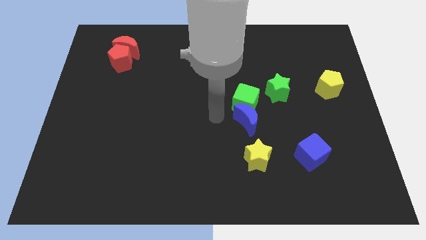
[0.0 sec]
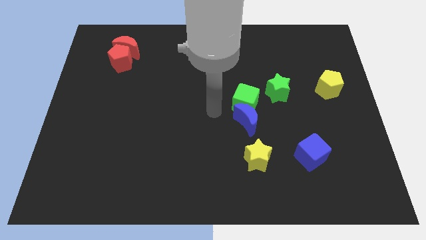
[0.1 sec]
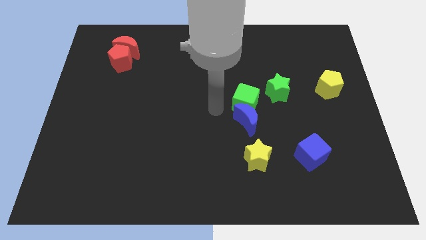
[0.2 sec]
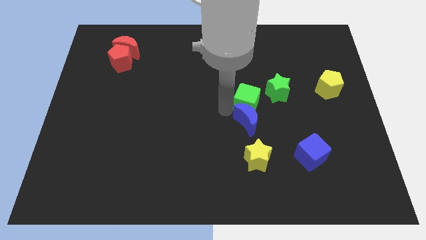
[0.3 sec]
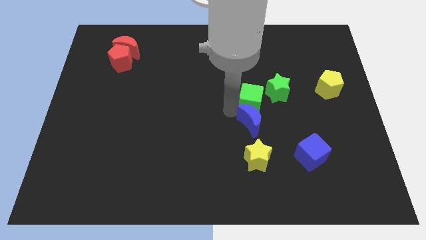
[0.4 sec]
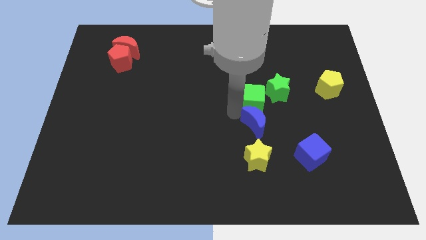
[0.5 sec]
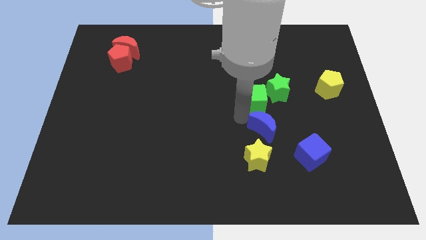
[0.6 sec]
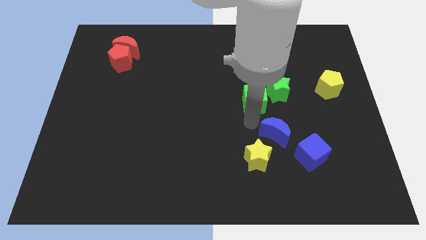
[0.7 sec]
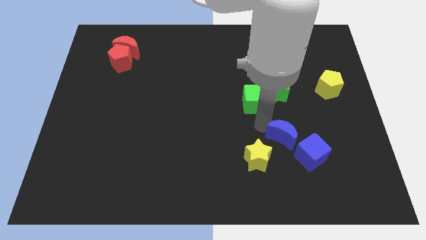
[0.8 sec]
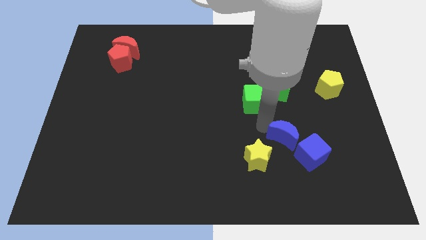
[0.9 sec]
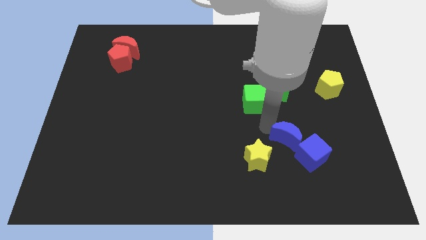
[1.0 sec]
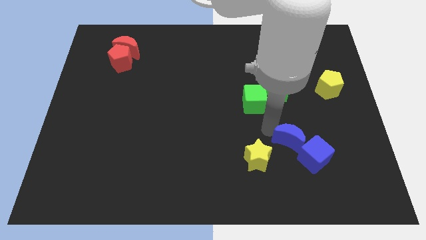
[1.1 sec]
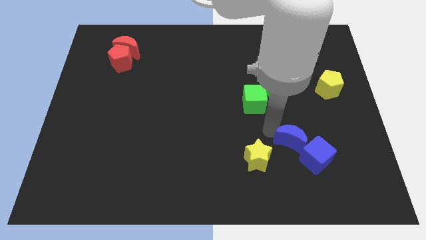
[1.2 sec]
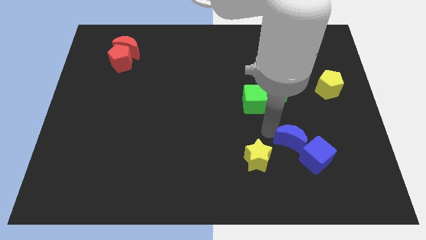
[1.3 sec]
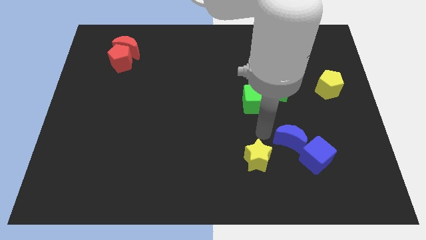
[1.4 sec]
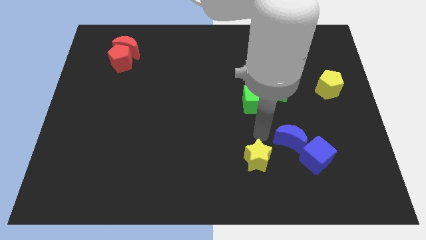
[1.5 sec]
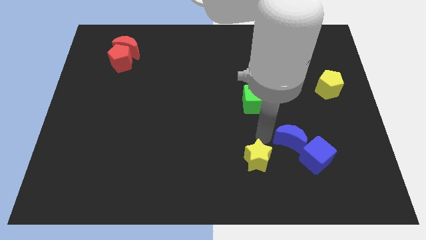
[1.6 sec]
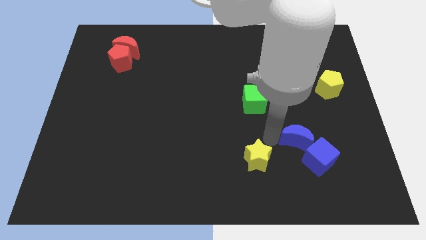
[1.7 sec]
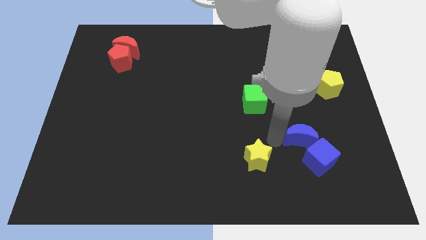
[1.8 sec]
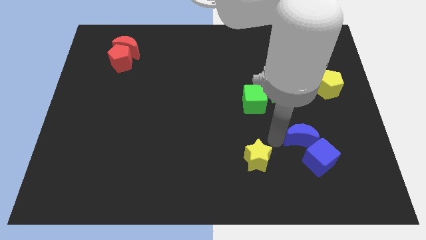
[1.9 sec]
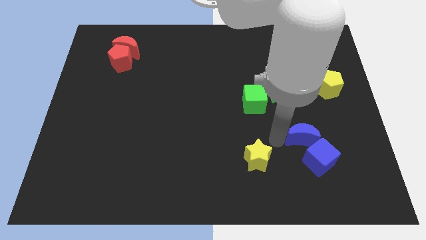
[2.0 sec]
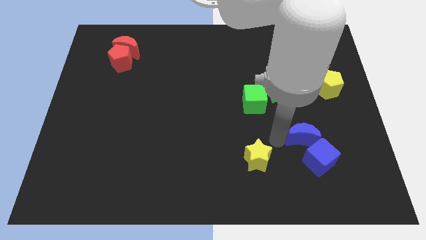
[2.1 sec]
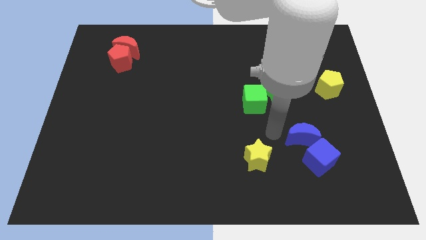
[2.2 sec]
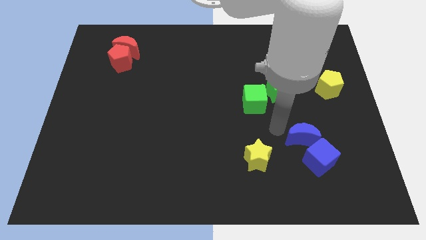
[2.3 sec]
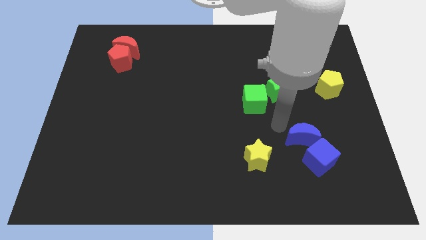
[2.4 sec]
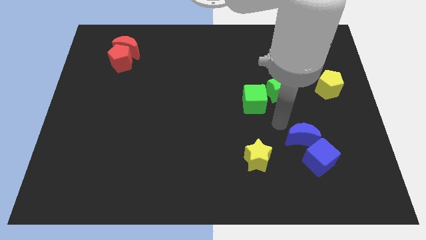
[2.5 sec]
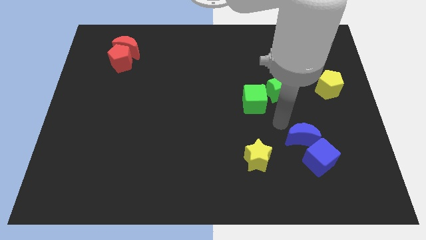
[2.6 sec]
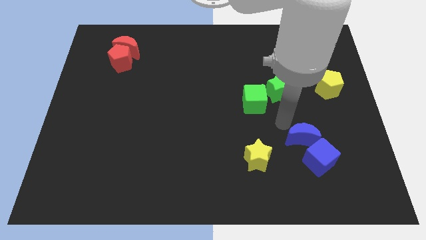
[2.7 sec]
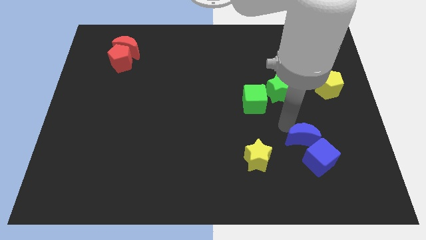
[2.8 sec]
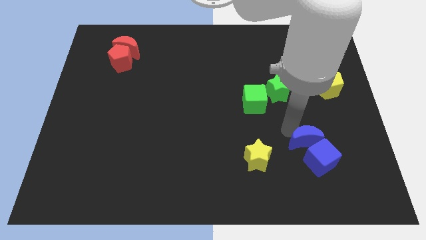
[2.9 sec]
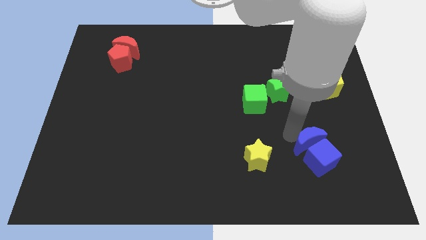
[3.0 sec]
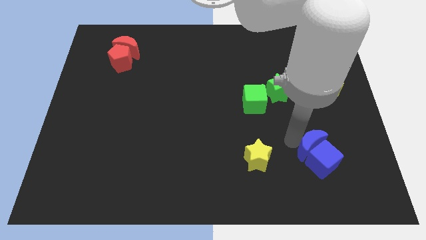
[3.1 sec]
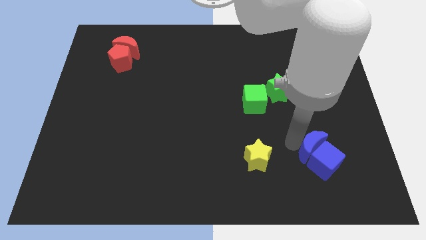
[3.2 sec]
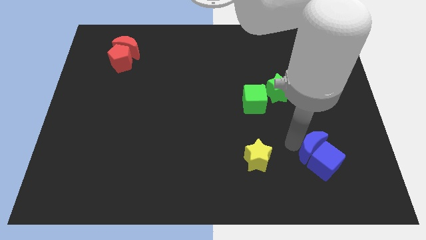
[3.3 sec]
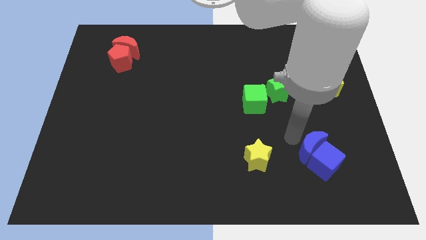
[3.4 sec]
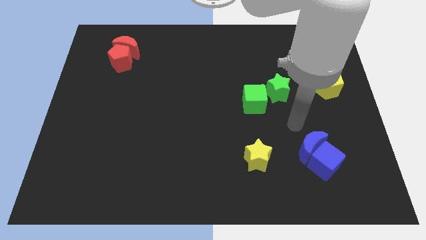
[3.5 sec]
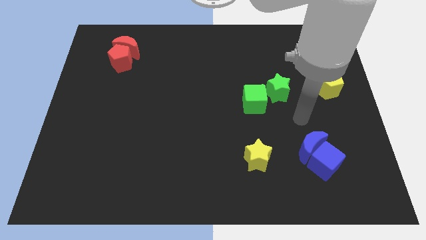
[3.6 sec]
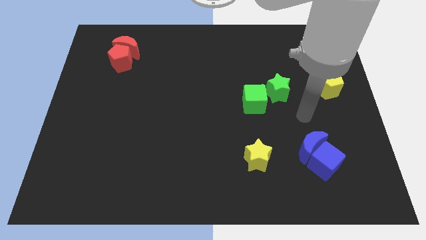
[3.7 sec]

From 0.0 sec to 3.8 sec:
push the blue moon and blue cube to the bottom right side of the board

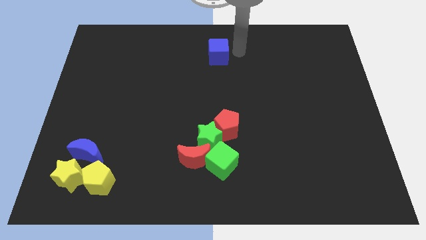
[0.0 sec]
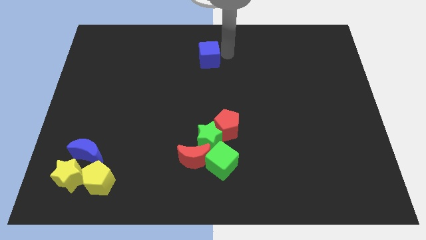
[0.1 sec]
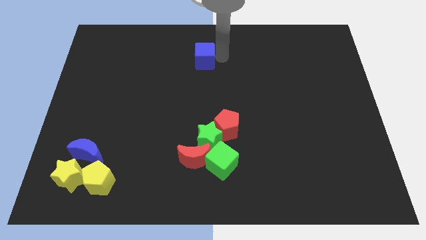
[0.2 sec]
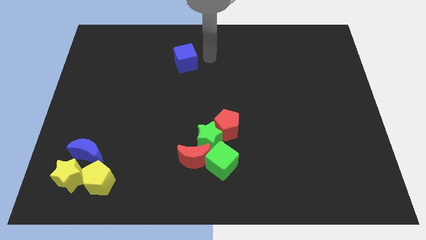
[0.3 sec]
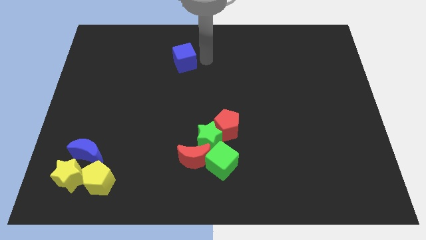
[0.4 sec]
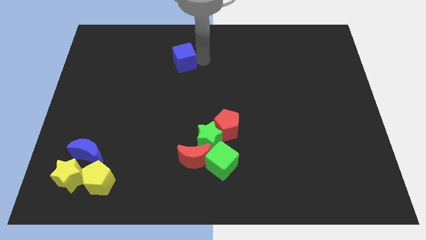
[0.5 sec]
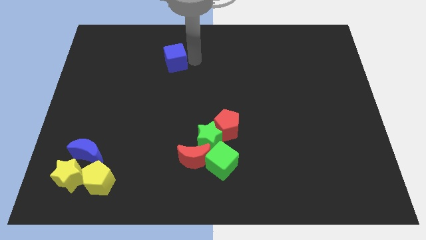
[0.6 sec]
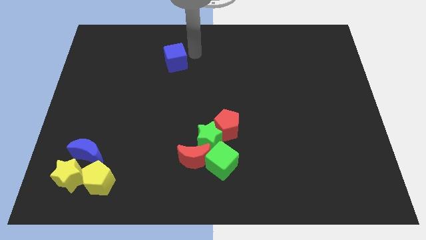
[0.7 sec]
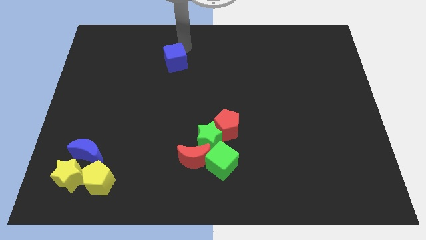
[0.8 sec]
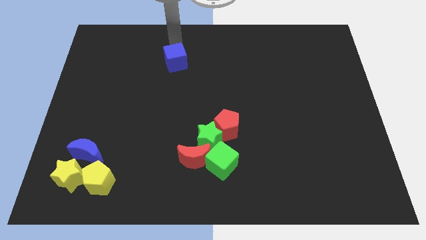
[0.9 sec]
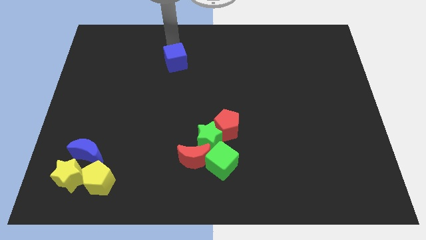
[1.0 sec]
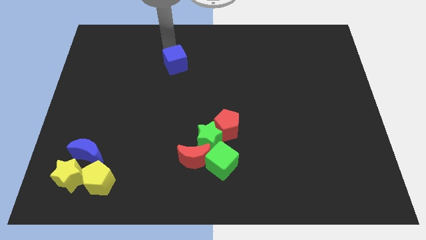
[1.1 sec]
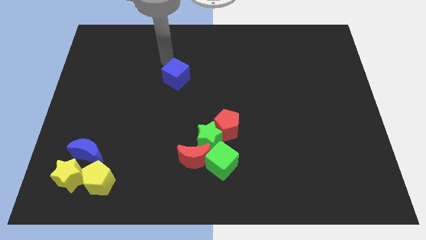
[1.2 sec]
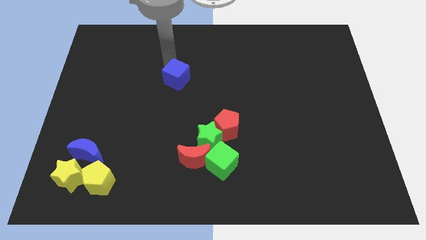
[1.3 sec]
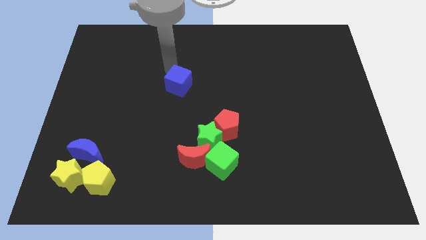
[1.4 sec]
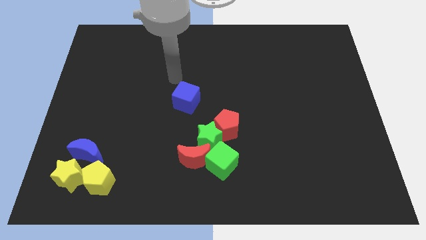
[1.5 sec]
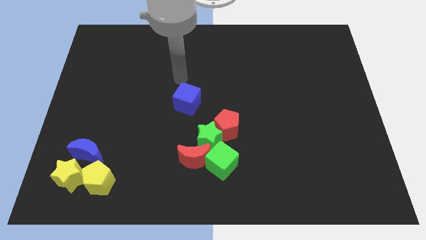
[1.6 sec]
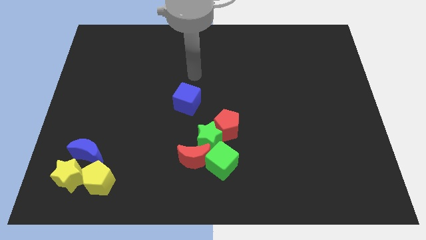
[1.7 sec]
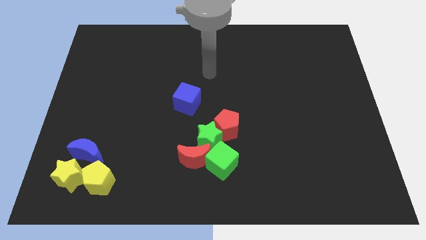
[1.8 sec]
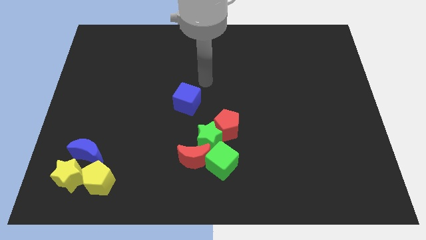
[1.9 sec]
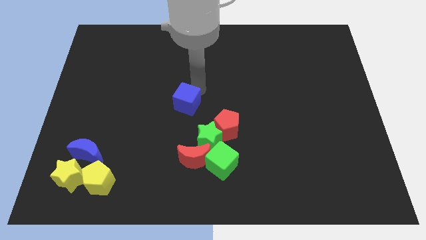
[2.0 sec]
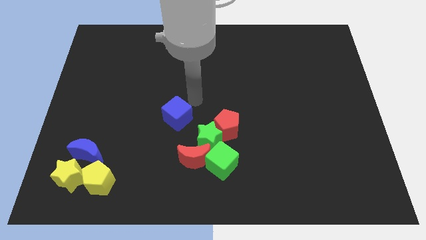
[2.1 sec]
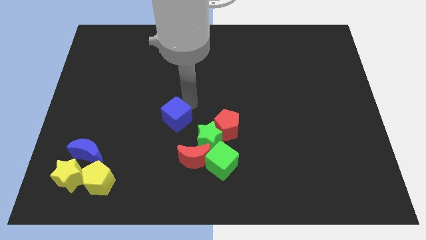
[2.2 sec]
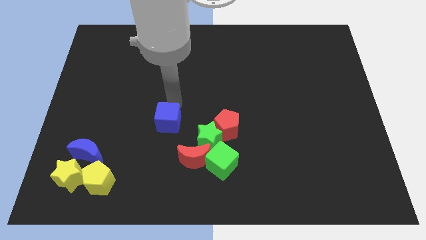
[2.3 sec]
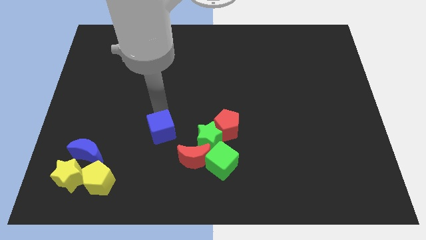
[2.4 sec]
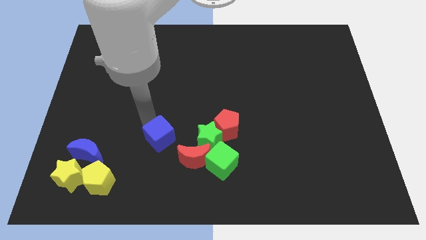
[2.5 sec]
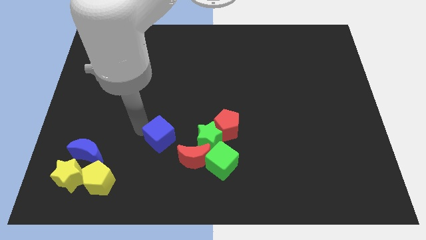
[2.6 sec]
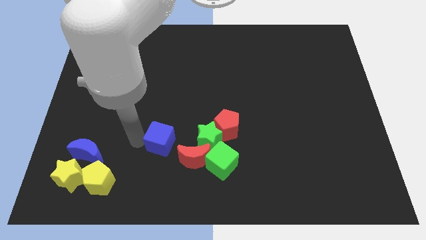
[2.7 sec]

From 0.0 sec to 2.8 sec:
move the blue cube to the top left of the red crescent

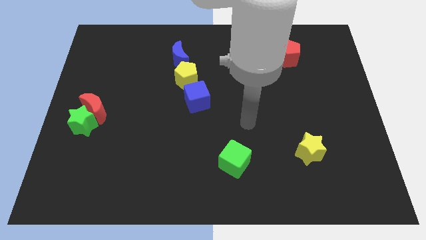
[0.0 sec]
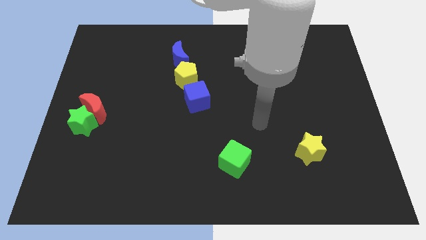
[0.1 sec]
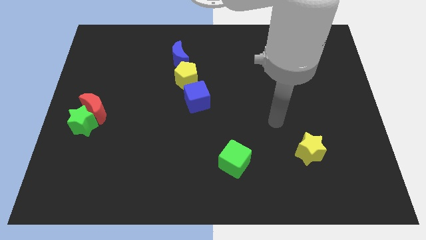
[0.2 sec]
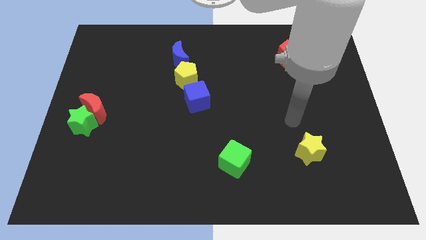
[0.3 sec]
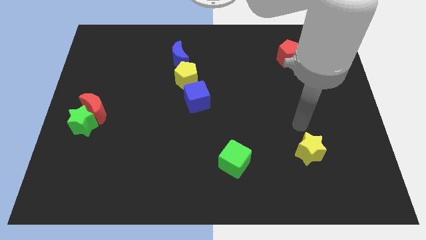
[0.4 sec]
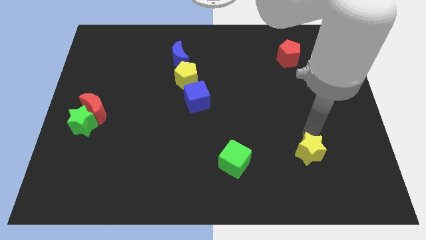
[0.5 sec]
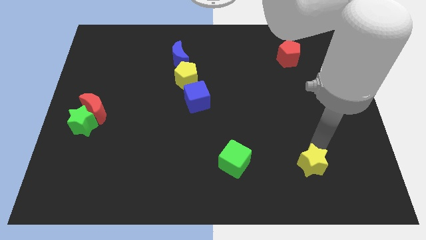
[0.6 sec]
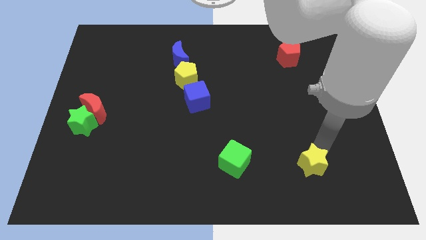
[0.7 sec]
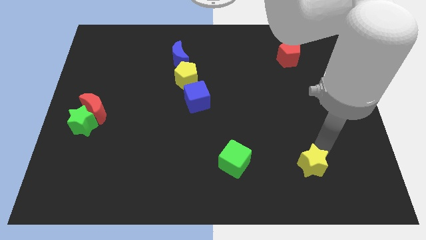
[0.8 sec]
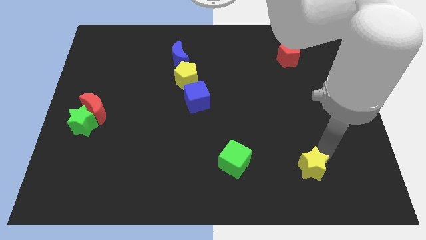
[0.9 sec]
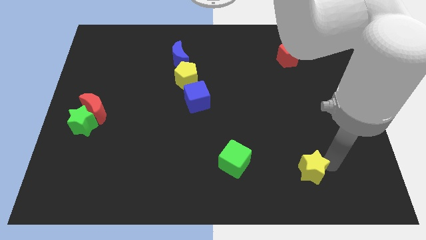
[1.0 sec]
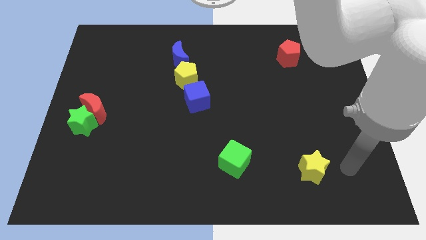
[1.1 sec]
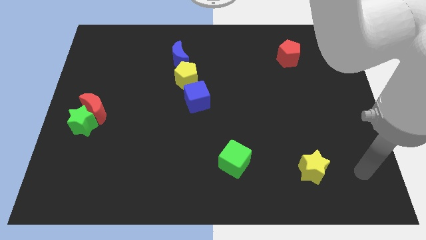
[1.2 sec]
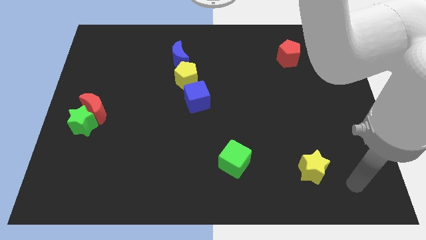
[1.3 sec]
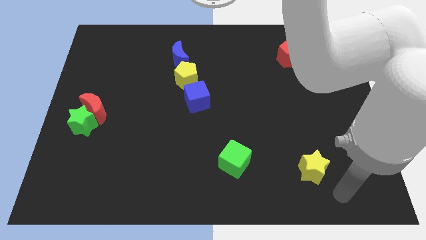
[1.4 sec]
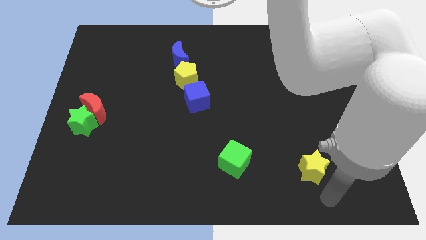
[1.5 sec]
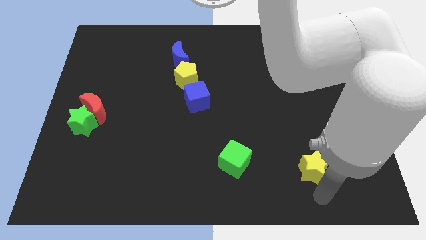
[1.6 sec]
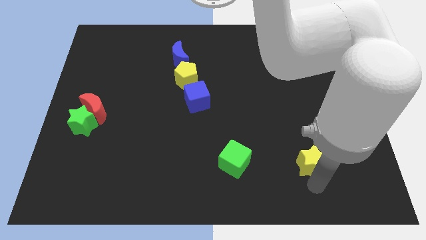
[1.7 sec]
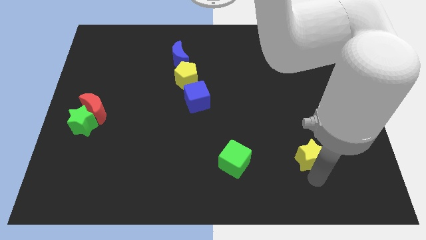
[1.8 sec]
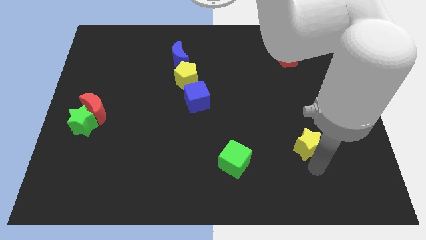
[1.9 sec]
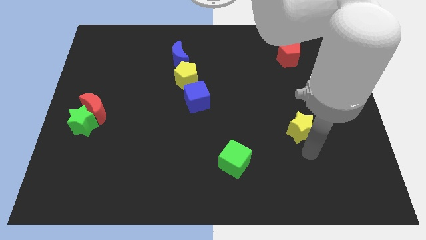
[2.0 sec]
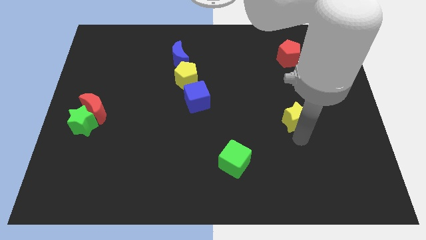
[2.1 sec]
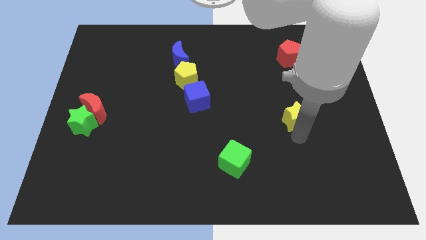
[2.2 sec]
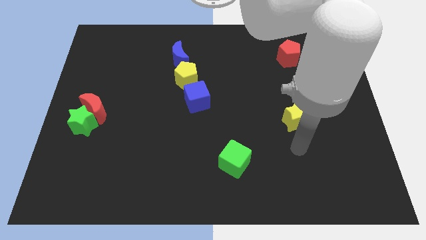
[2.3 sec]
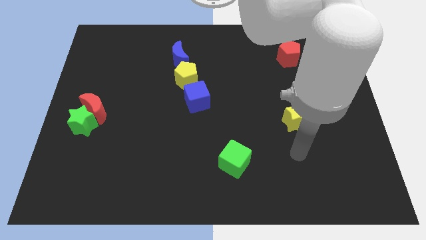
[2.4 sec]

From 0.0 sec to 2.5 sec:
slide the yellow star to the diagonal top right of the green cube
